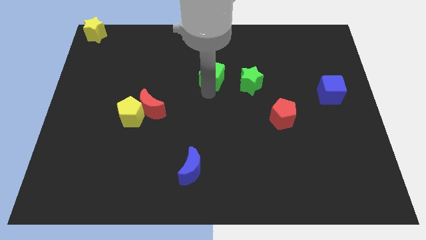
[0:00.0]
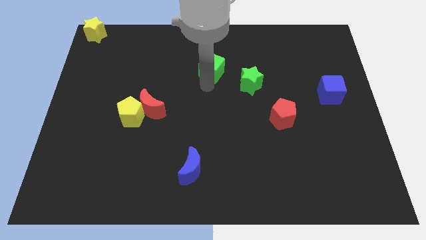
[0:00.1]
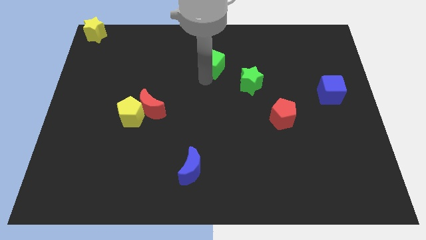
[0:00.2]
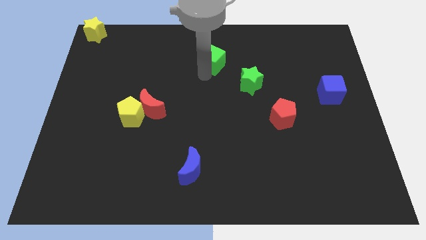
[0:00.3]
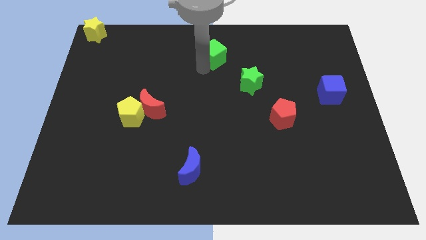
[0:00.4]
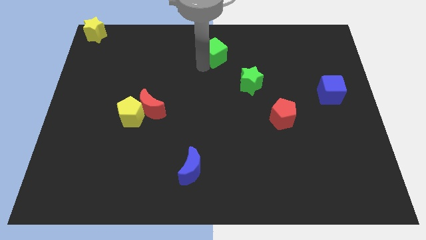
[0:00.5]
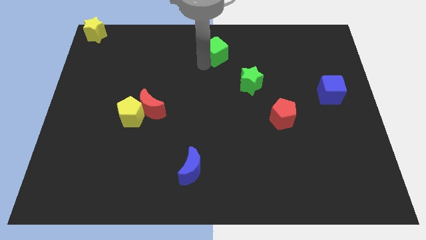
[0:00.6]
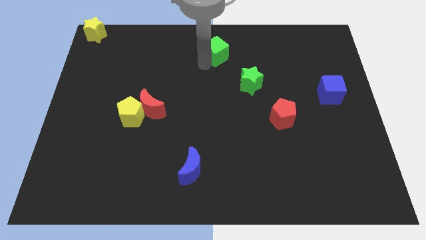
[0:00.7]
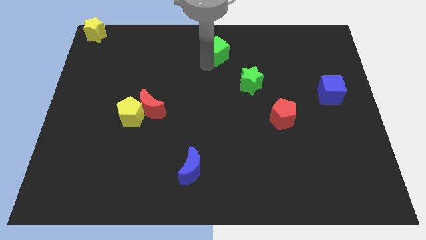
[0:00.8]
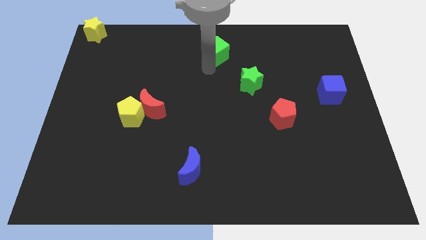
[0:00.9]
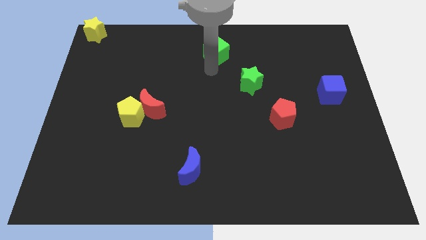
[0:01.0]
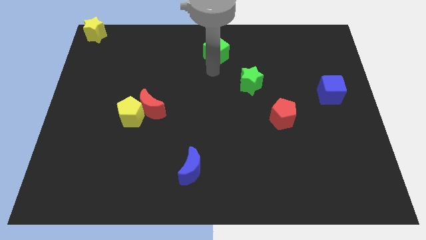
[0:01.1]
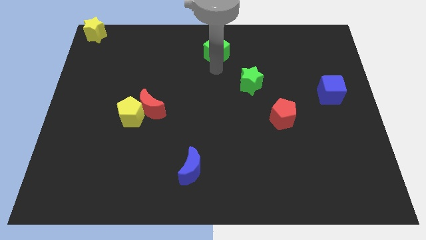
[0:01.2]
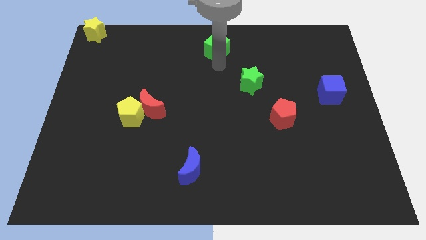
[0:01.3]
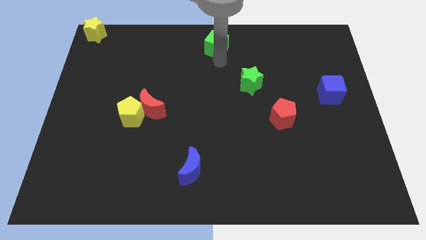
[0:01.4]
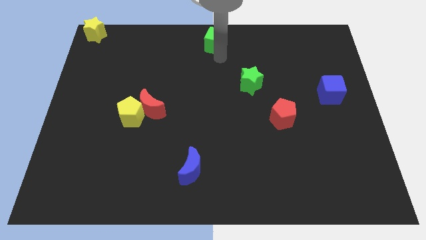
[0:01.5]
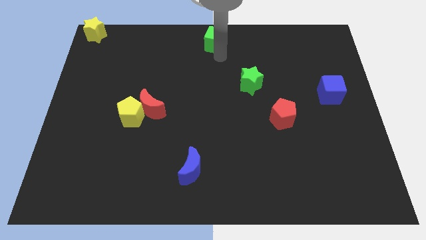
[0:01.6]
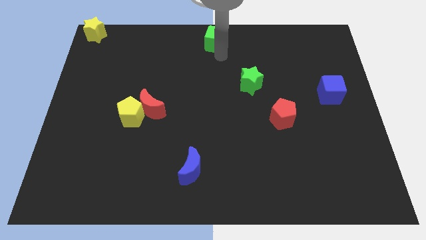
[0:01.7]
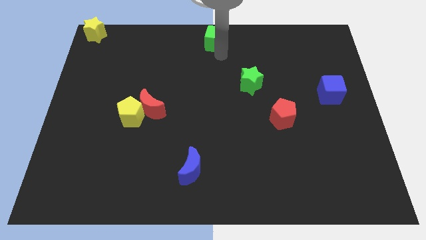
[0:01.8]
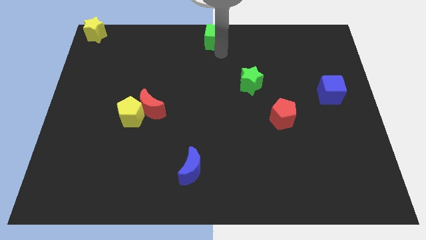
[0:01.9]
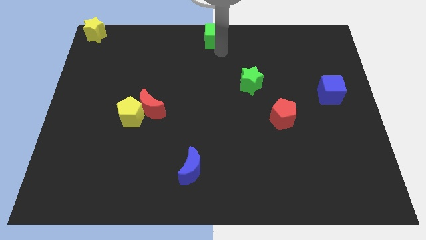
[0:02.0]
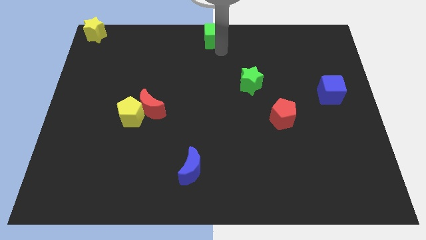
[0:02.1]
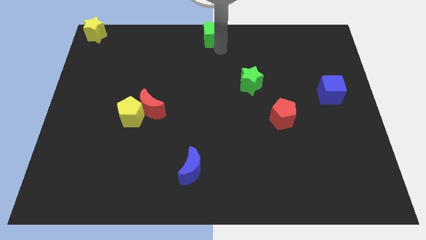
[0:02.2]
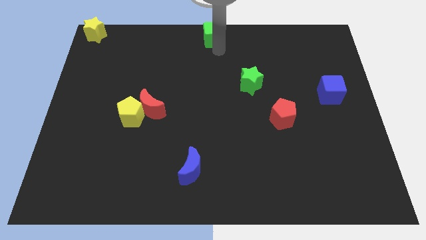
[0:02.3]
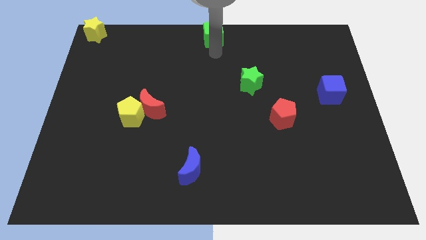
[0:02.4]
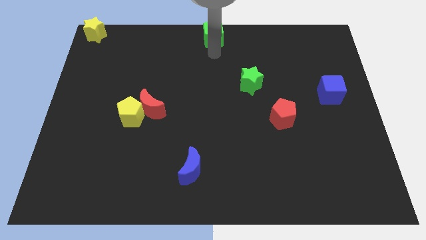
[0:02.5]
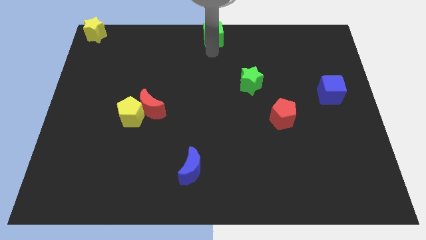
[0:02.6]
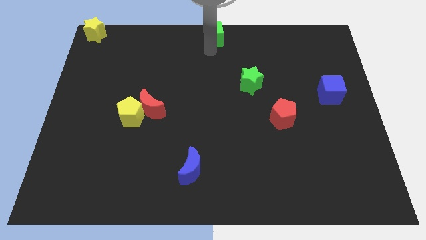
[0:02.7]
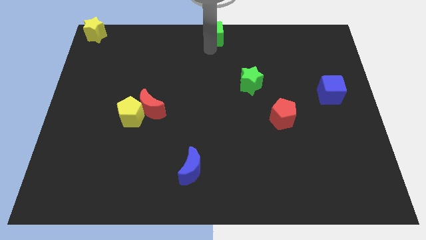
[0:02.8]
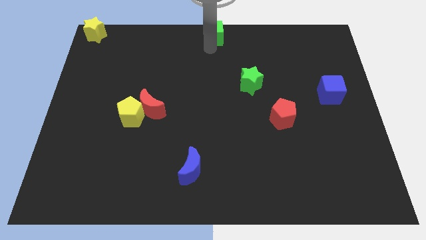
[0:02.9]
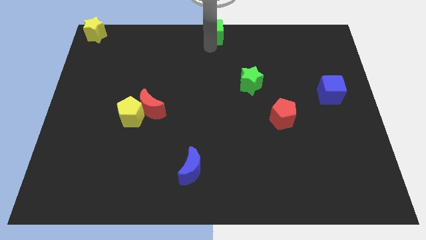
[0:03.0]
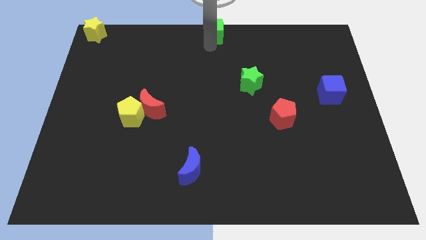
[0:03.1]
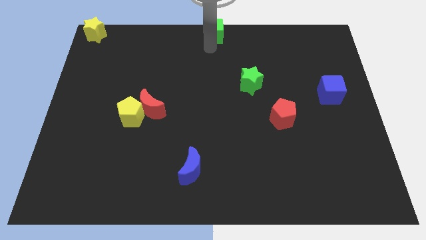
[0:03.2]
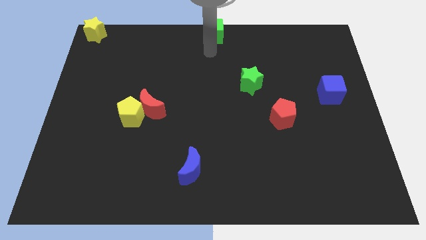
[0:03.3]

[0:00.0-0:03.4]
move the green cube to the top center of the board

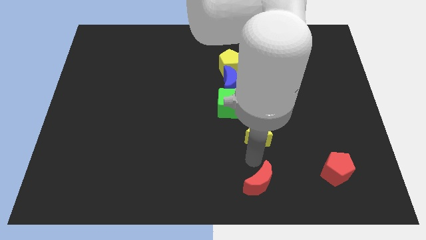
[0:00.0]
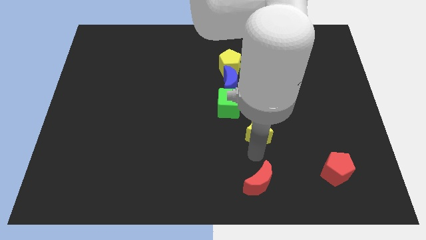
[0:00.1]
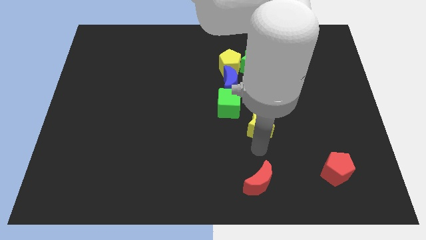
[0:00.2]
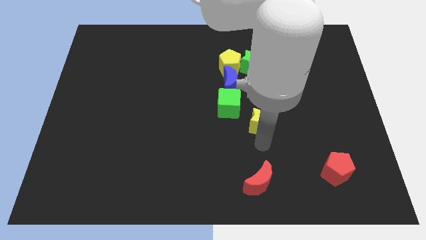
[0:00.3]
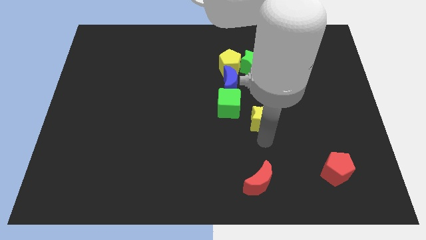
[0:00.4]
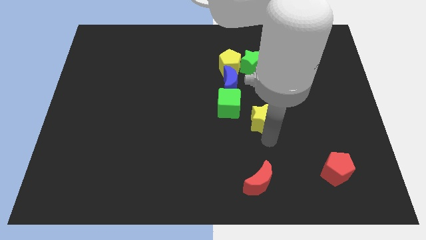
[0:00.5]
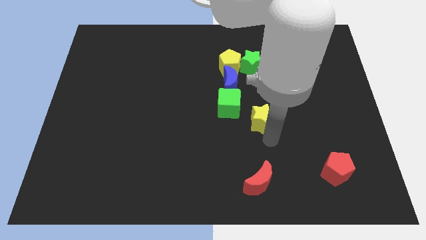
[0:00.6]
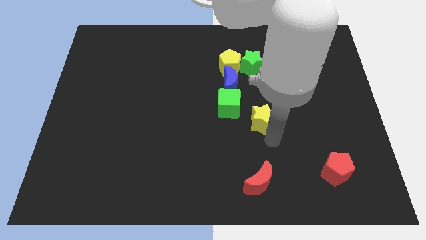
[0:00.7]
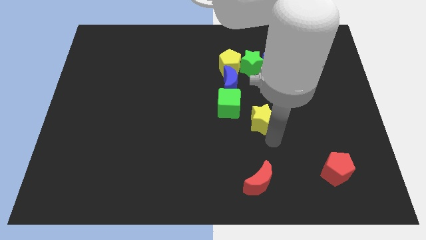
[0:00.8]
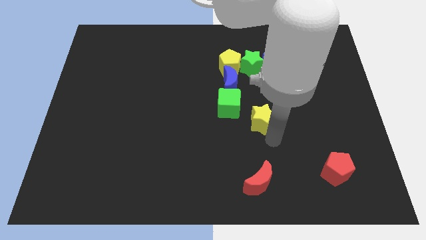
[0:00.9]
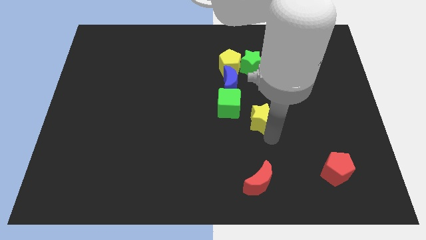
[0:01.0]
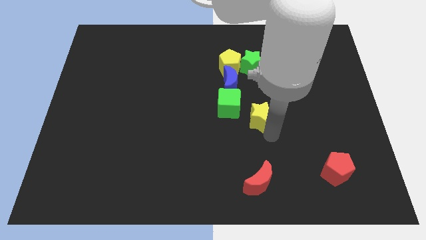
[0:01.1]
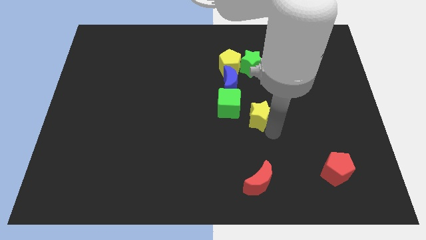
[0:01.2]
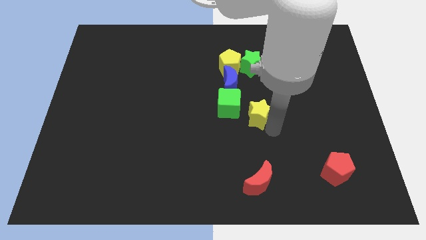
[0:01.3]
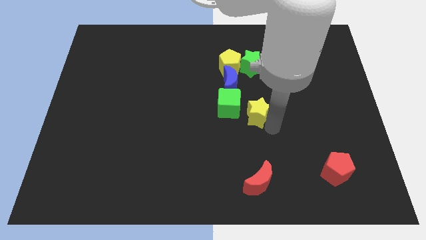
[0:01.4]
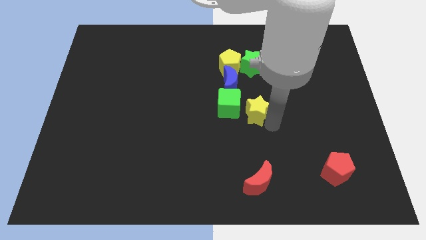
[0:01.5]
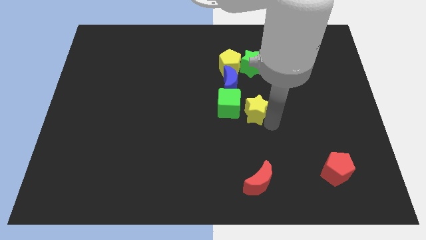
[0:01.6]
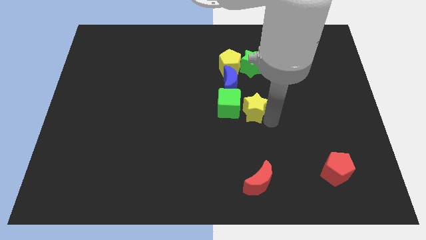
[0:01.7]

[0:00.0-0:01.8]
place the yellow star right to the green cube

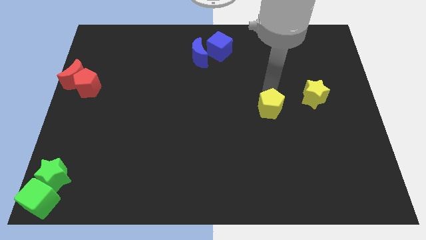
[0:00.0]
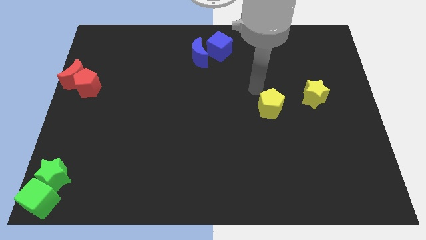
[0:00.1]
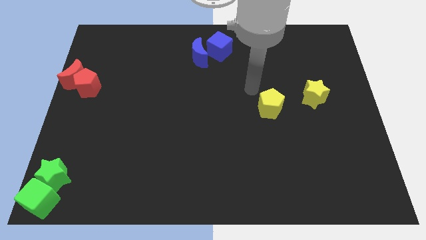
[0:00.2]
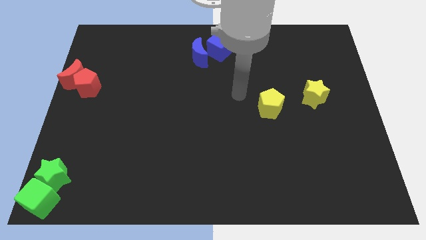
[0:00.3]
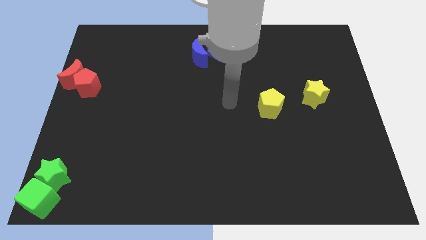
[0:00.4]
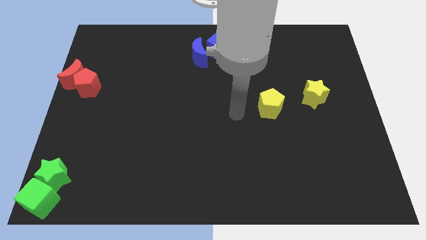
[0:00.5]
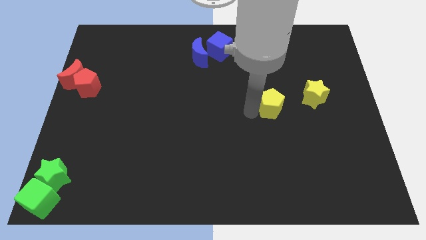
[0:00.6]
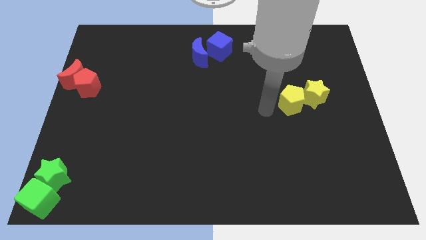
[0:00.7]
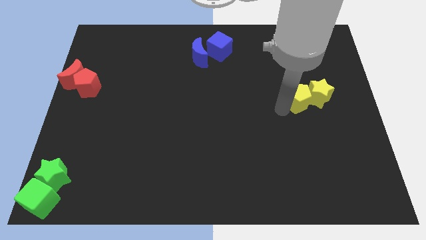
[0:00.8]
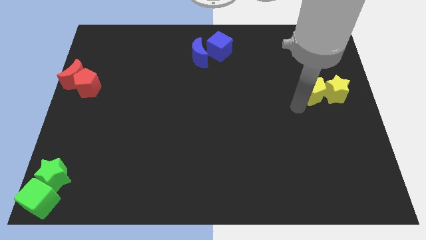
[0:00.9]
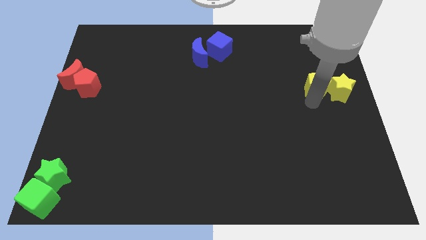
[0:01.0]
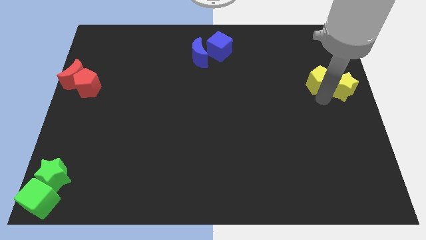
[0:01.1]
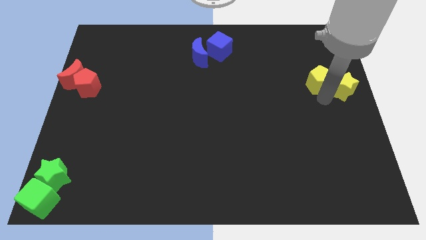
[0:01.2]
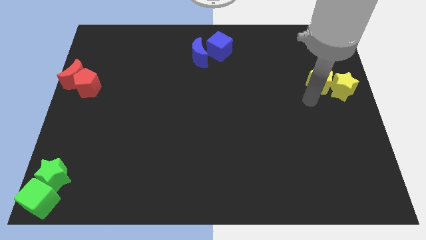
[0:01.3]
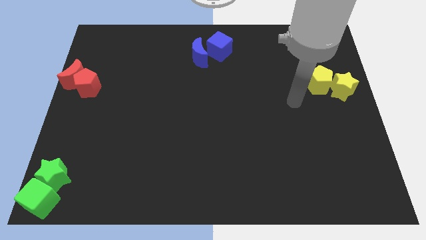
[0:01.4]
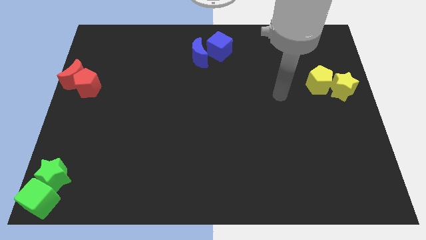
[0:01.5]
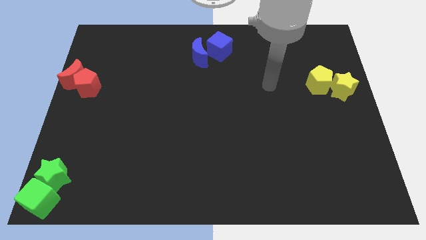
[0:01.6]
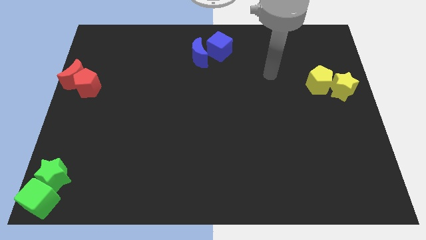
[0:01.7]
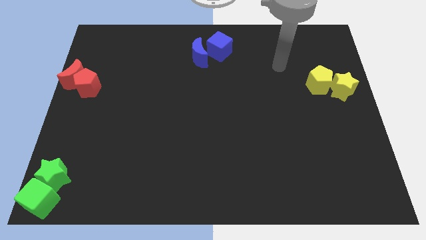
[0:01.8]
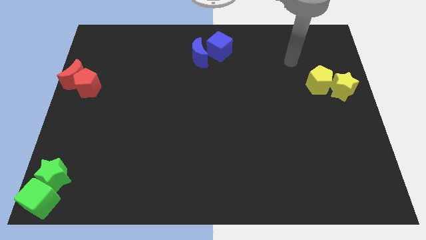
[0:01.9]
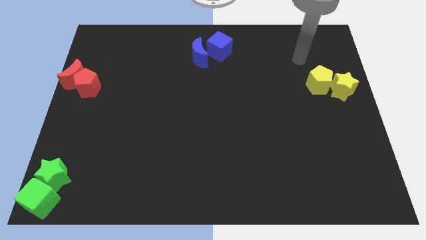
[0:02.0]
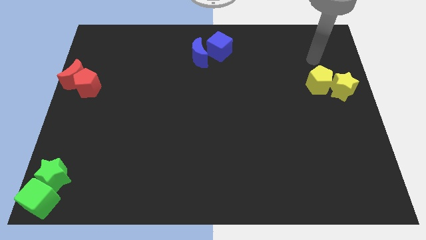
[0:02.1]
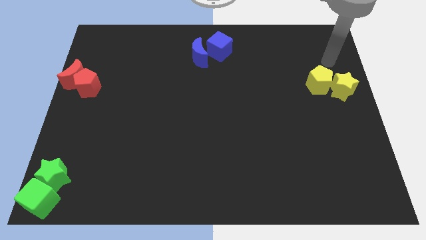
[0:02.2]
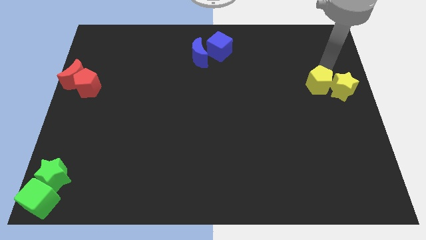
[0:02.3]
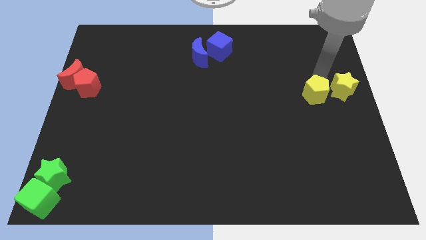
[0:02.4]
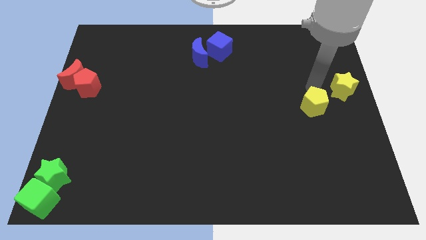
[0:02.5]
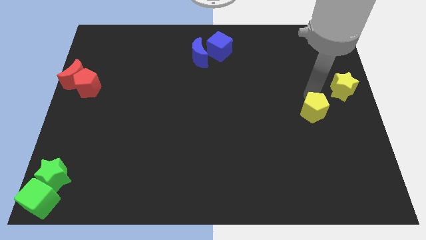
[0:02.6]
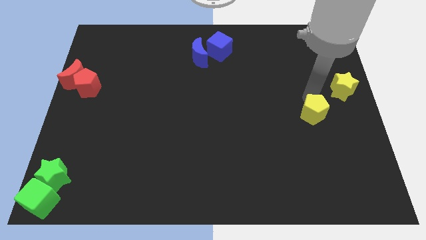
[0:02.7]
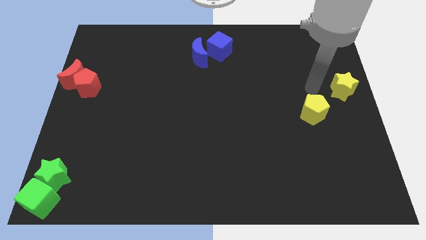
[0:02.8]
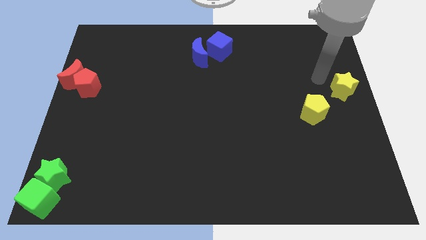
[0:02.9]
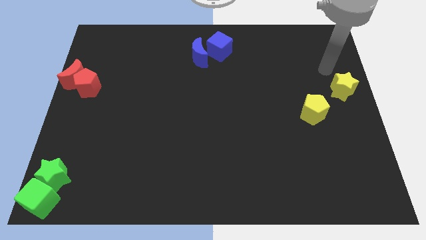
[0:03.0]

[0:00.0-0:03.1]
push the yellow pentagon to the bottom left of the yellow star

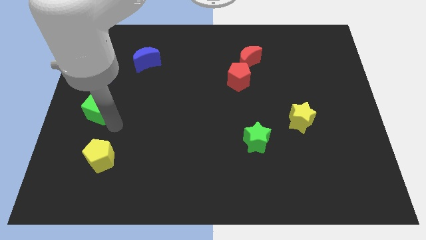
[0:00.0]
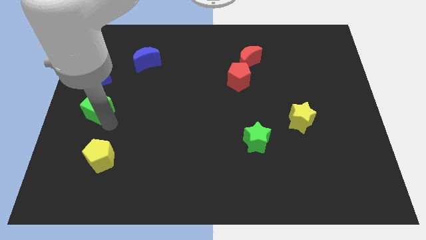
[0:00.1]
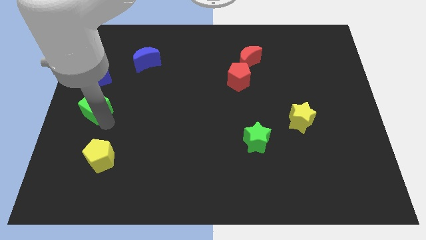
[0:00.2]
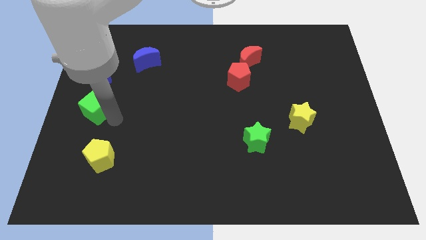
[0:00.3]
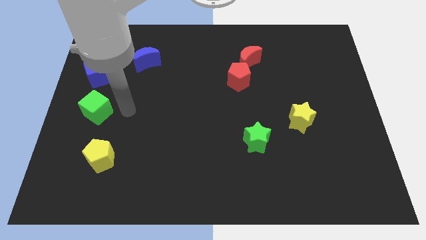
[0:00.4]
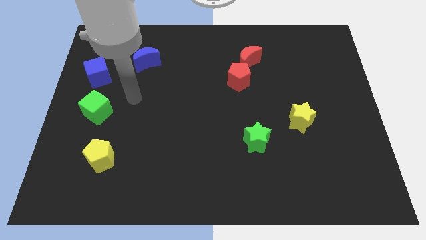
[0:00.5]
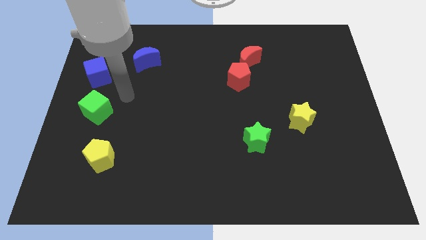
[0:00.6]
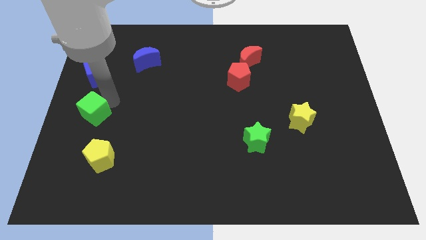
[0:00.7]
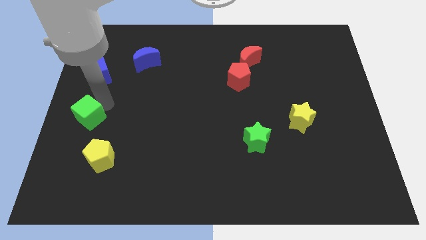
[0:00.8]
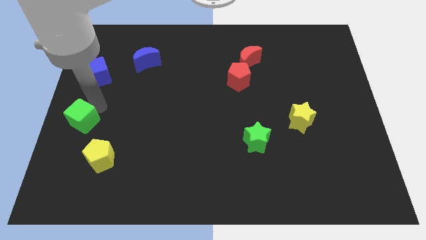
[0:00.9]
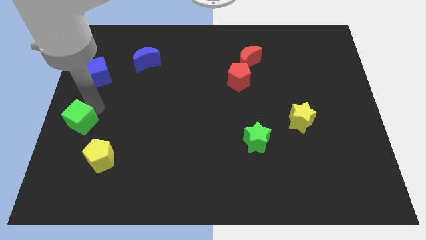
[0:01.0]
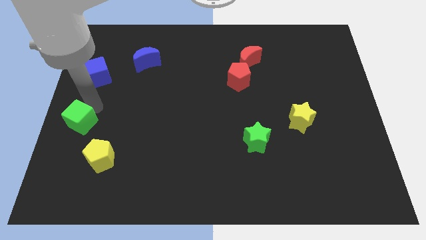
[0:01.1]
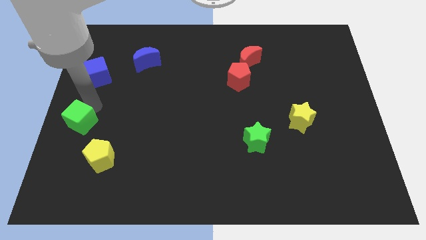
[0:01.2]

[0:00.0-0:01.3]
move the green cube slightly to the left center of the board
